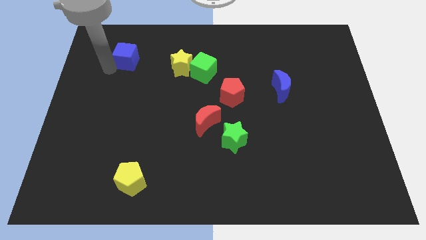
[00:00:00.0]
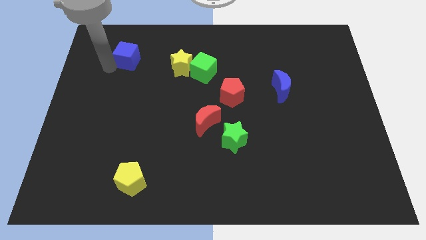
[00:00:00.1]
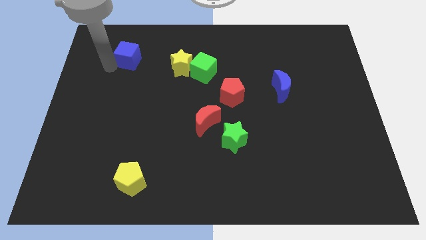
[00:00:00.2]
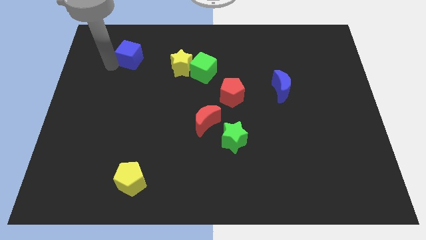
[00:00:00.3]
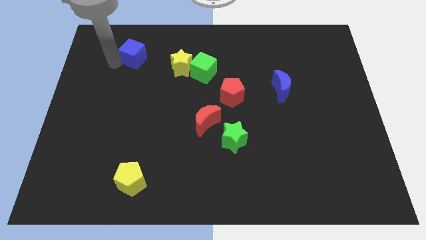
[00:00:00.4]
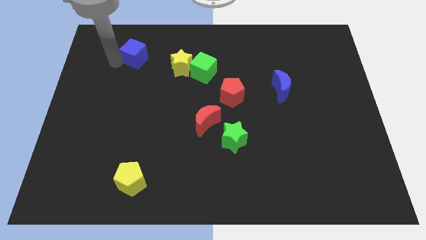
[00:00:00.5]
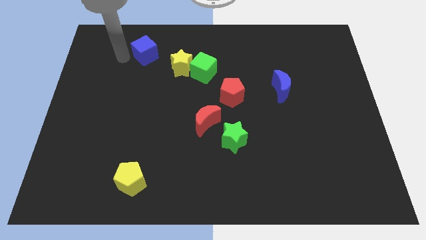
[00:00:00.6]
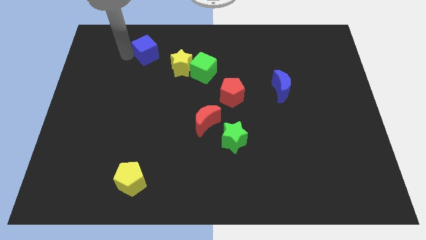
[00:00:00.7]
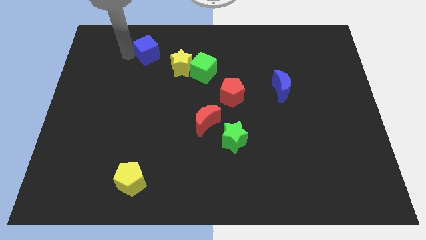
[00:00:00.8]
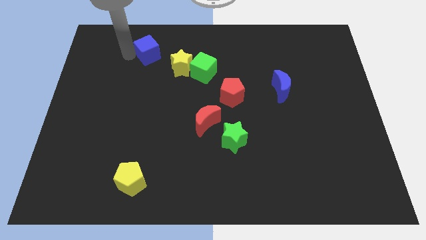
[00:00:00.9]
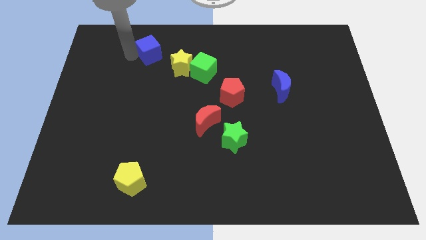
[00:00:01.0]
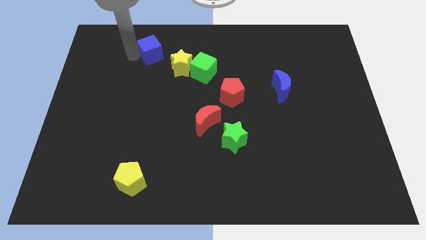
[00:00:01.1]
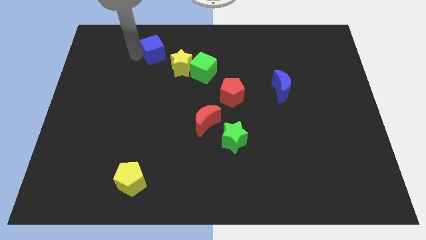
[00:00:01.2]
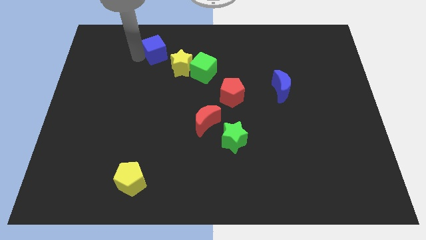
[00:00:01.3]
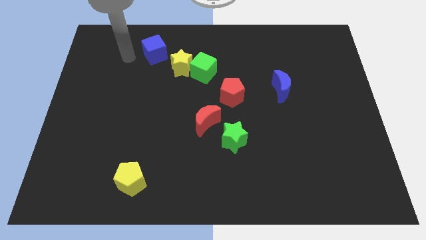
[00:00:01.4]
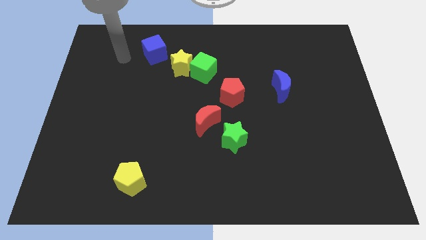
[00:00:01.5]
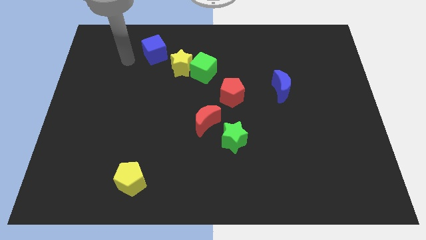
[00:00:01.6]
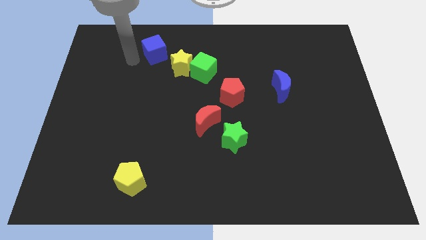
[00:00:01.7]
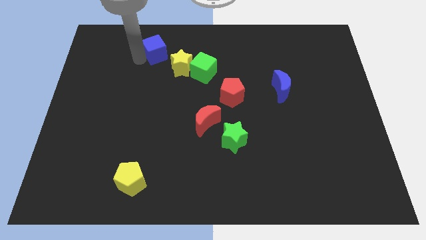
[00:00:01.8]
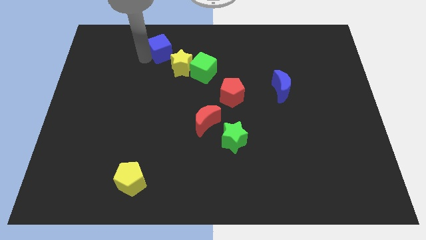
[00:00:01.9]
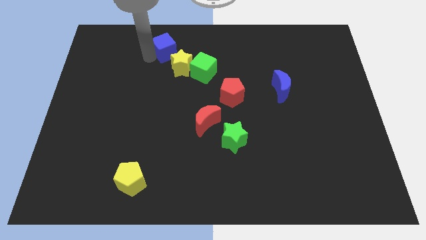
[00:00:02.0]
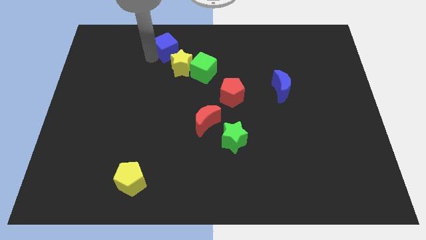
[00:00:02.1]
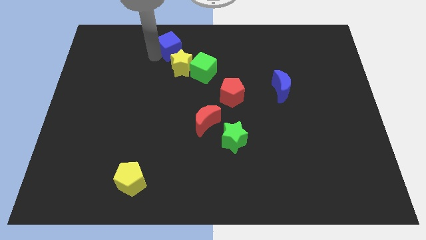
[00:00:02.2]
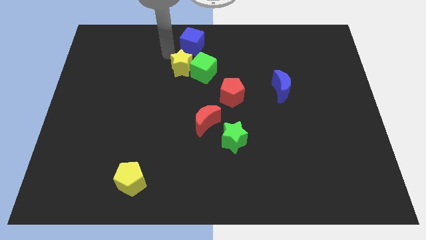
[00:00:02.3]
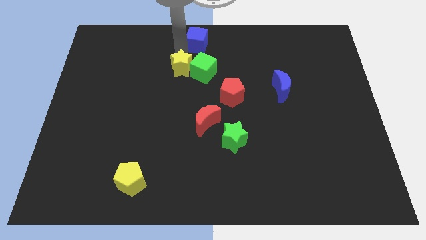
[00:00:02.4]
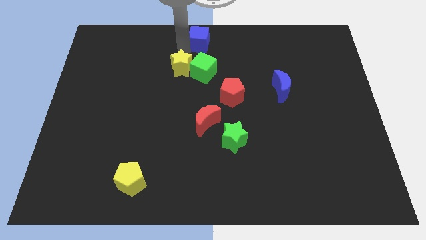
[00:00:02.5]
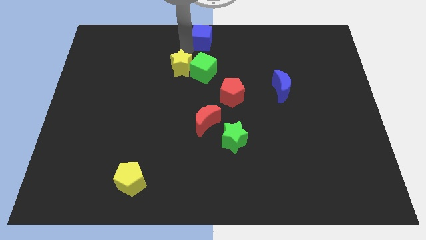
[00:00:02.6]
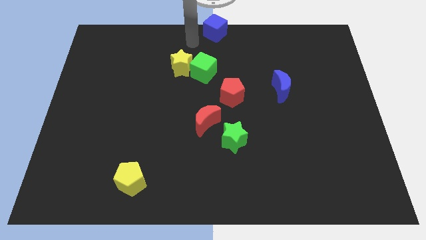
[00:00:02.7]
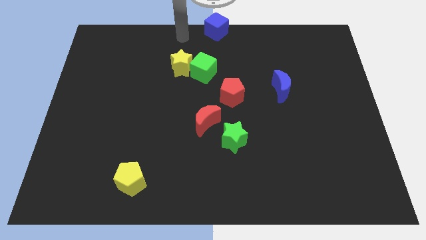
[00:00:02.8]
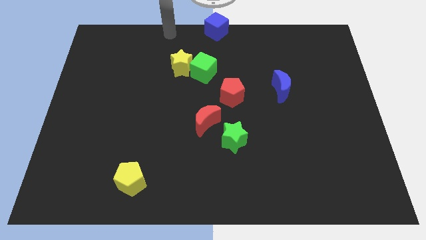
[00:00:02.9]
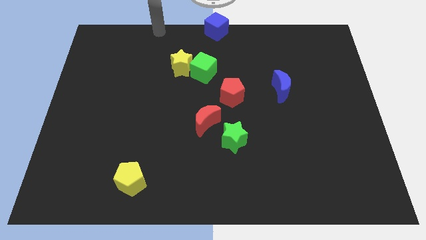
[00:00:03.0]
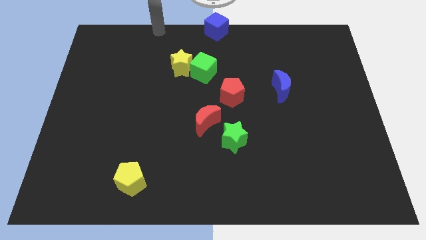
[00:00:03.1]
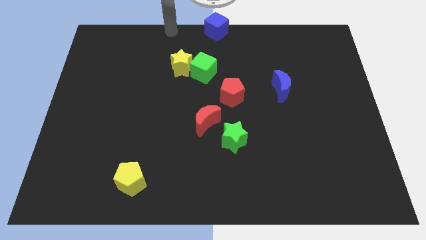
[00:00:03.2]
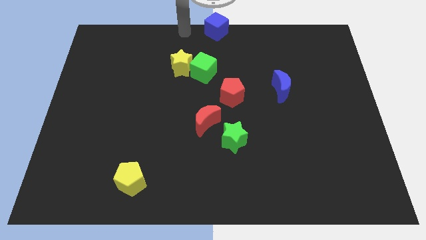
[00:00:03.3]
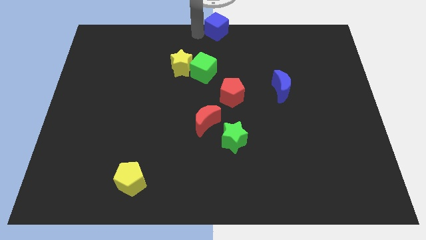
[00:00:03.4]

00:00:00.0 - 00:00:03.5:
move blue cube to center top

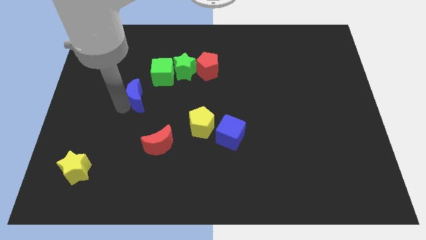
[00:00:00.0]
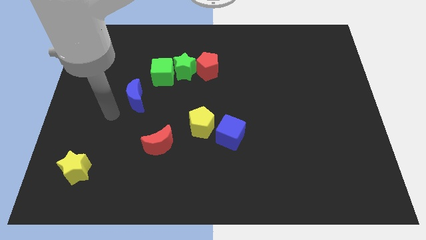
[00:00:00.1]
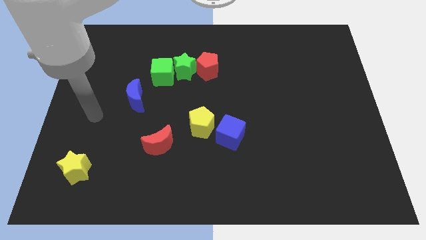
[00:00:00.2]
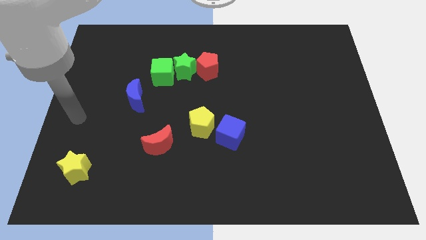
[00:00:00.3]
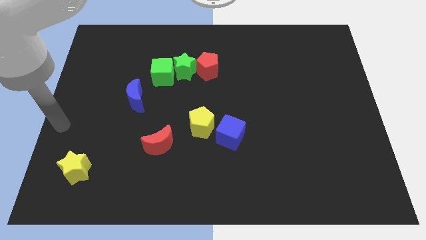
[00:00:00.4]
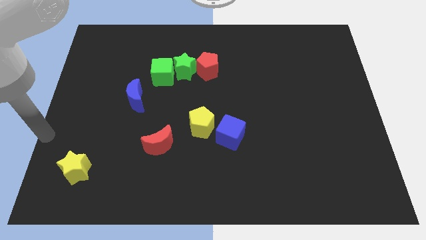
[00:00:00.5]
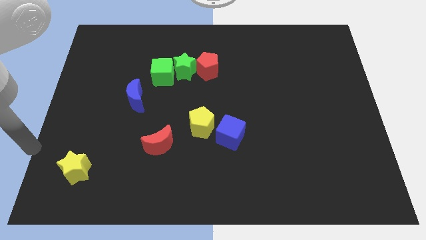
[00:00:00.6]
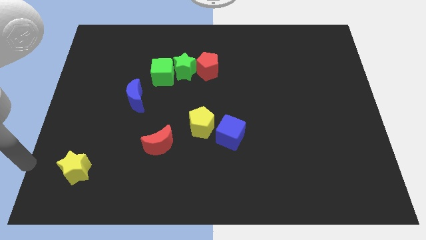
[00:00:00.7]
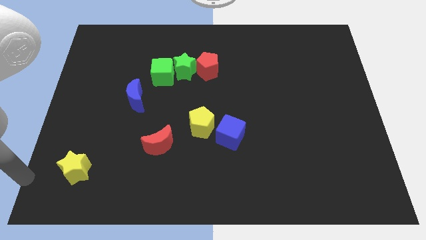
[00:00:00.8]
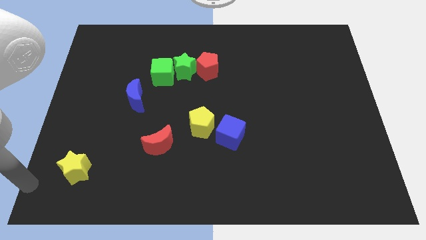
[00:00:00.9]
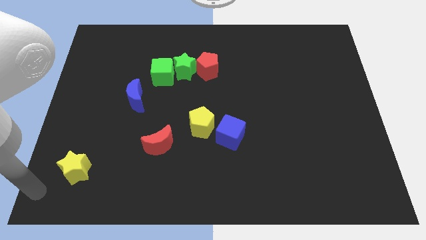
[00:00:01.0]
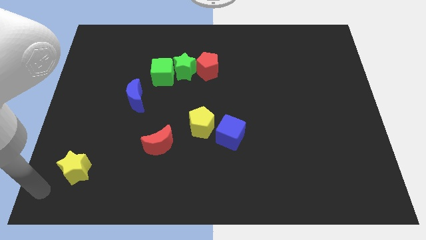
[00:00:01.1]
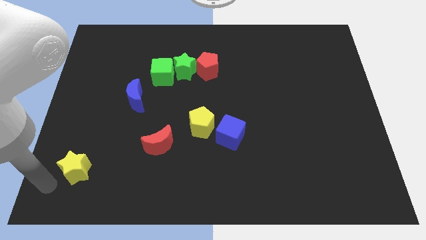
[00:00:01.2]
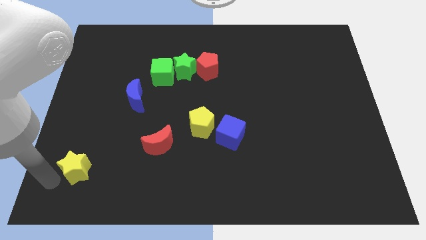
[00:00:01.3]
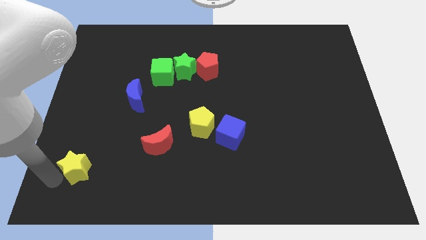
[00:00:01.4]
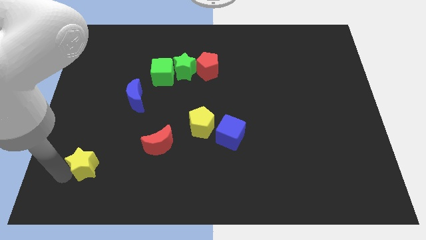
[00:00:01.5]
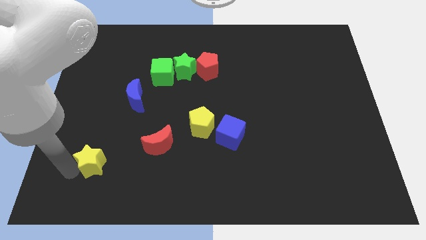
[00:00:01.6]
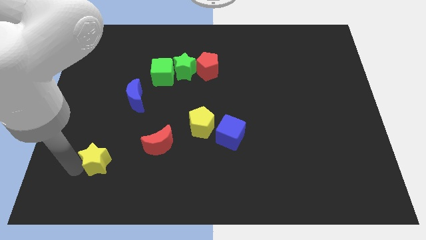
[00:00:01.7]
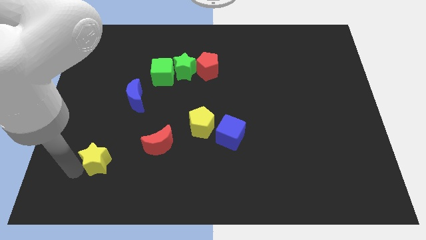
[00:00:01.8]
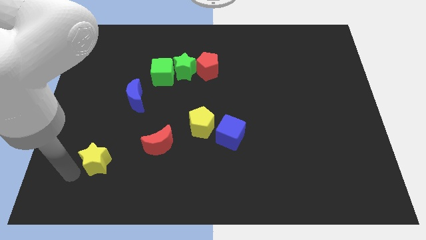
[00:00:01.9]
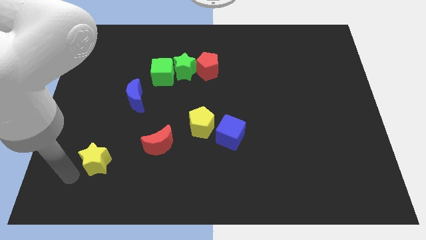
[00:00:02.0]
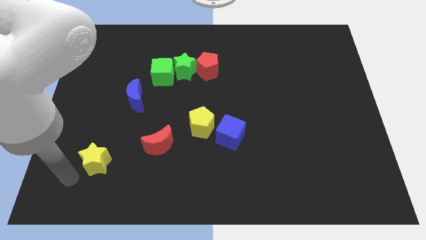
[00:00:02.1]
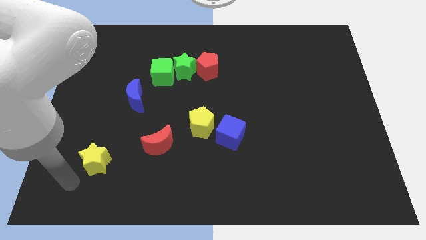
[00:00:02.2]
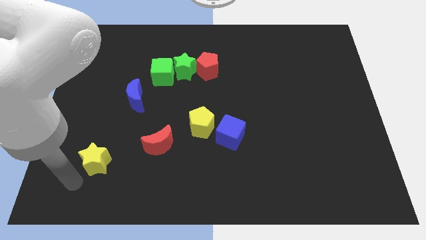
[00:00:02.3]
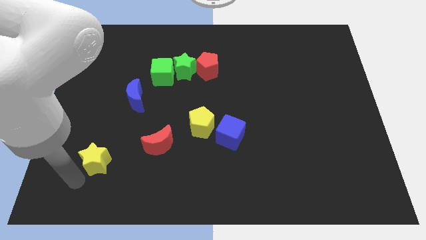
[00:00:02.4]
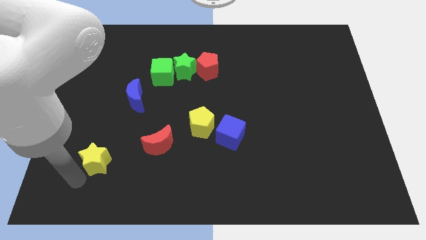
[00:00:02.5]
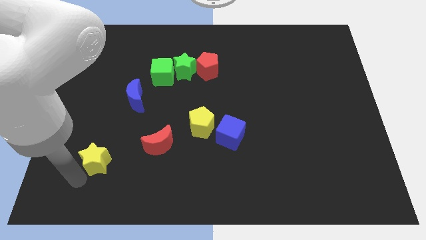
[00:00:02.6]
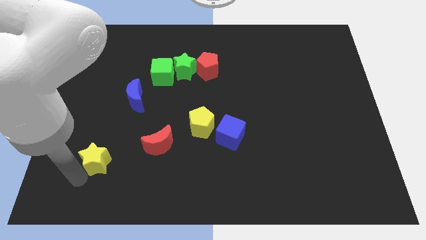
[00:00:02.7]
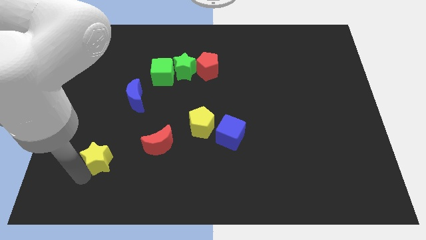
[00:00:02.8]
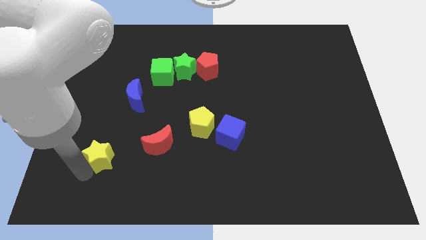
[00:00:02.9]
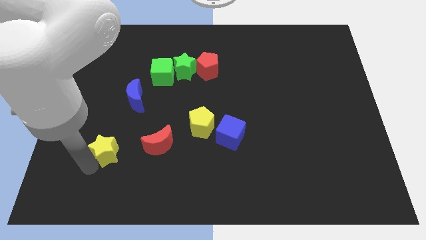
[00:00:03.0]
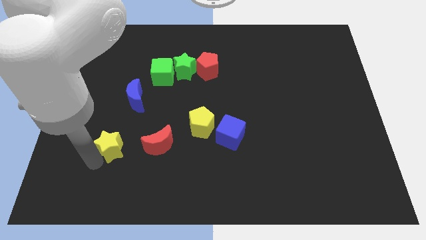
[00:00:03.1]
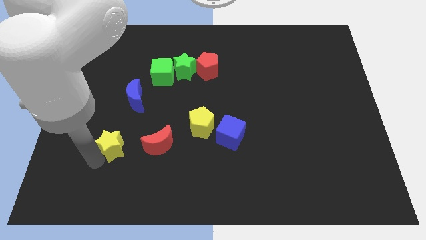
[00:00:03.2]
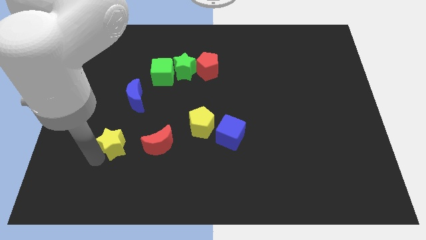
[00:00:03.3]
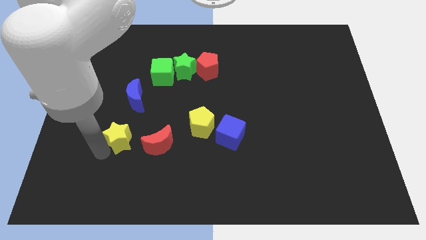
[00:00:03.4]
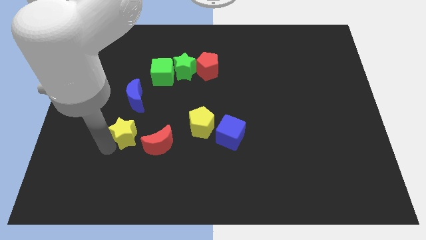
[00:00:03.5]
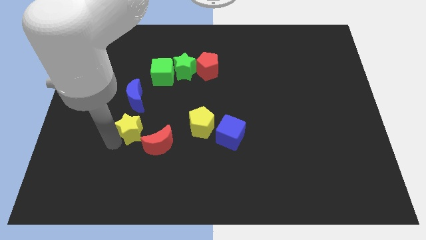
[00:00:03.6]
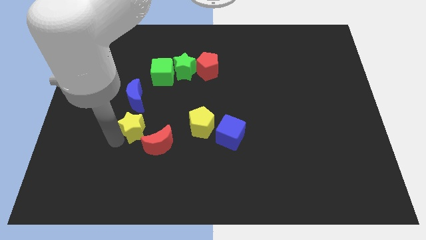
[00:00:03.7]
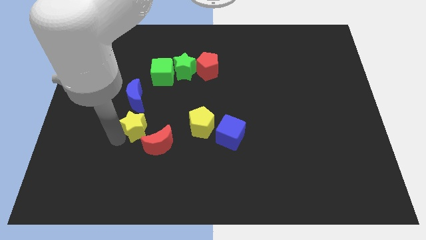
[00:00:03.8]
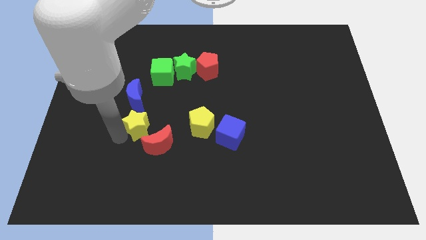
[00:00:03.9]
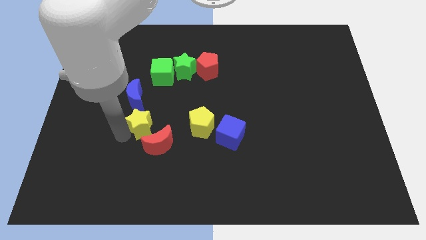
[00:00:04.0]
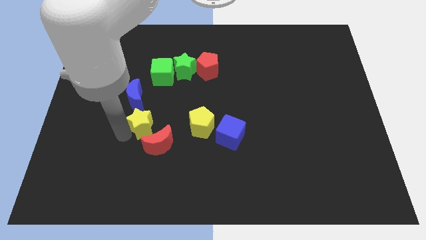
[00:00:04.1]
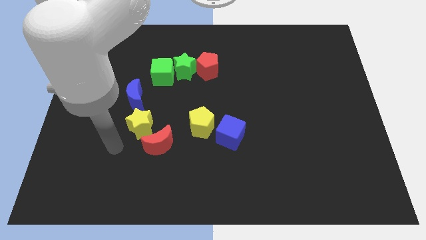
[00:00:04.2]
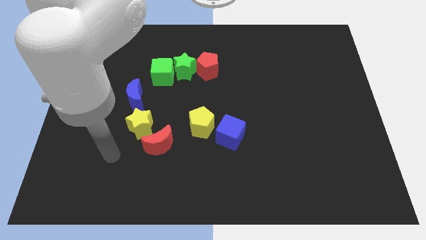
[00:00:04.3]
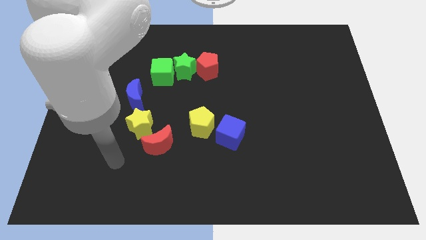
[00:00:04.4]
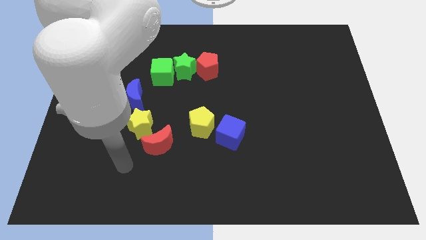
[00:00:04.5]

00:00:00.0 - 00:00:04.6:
place the yellow star in between the red and blue crescents

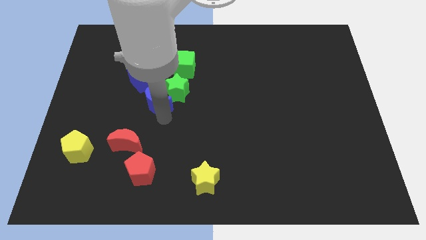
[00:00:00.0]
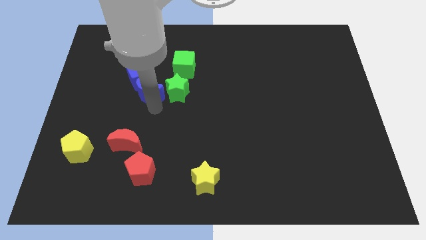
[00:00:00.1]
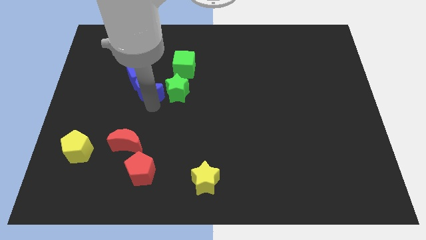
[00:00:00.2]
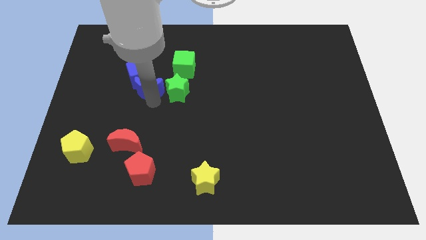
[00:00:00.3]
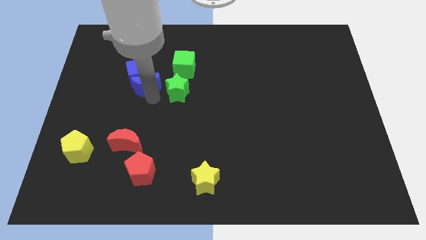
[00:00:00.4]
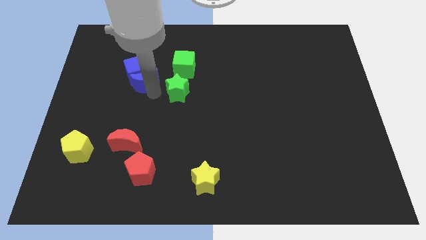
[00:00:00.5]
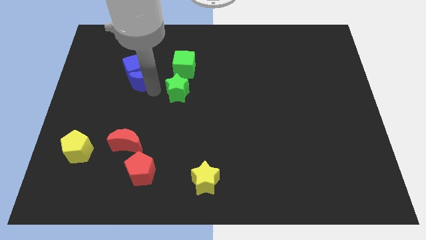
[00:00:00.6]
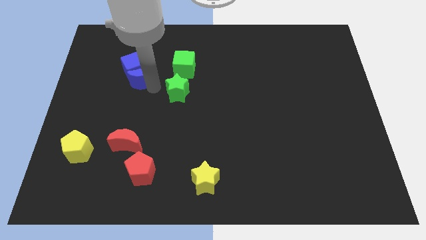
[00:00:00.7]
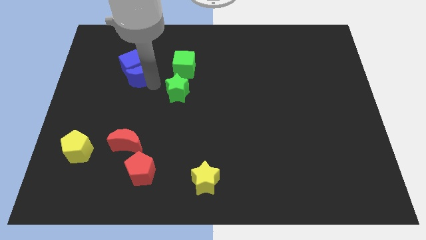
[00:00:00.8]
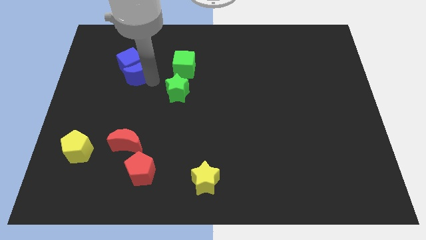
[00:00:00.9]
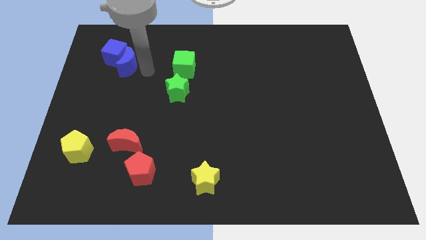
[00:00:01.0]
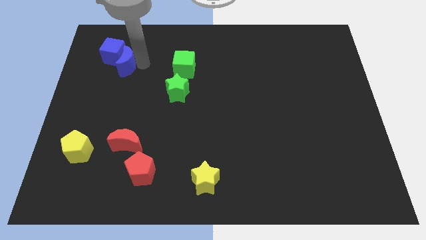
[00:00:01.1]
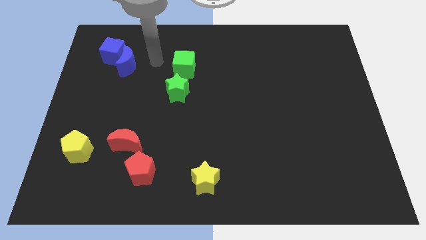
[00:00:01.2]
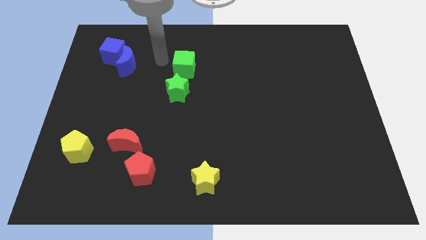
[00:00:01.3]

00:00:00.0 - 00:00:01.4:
drag the blue blocks towards the top left corner
